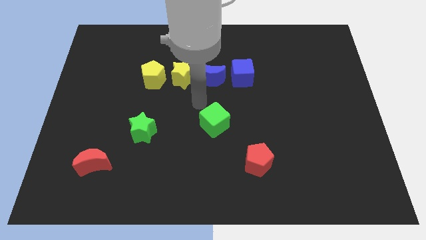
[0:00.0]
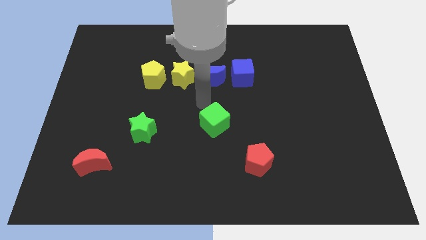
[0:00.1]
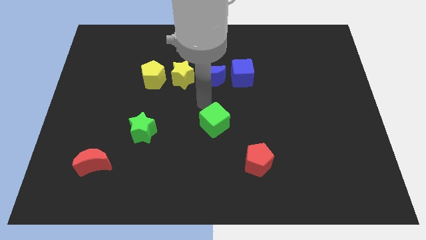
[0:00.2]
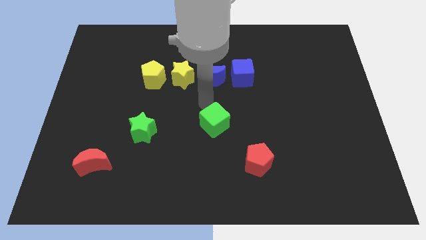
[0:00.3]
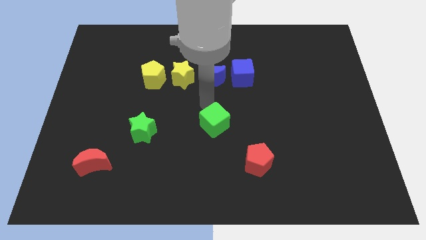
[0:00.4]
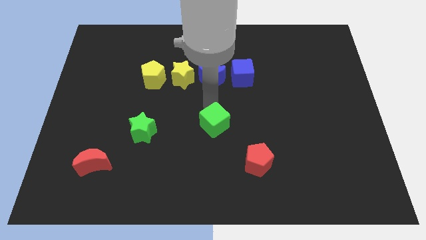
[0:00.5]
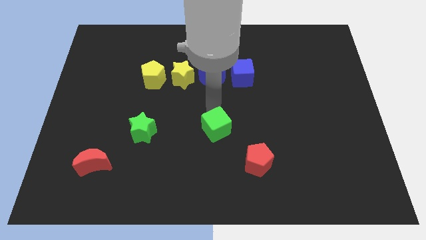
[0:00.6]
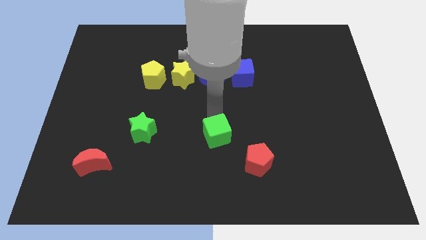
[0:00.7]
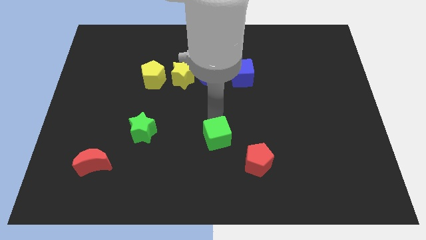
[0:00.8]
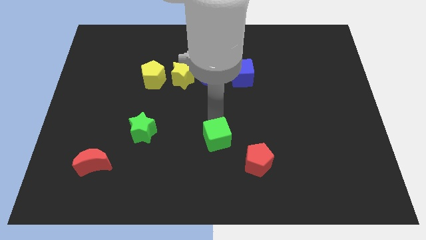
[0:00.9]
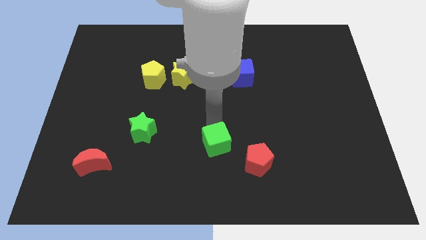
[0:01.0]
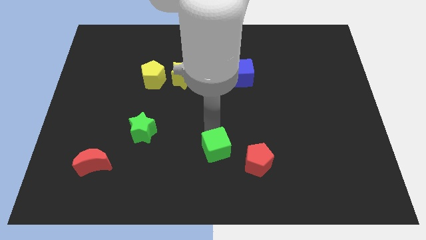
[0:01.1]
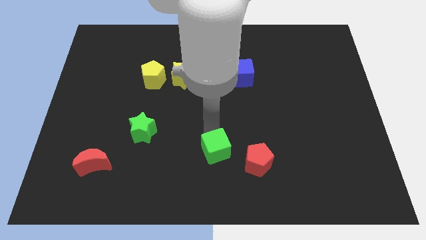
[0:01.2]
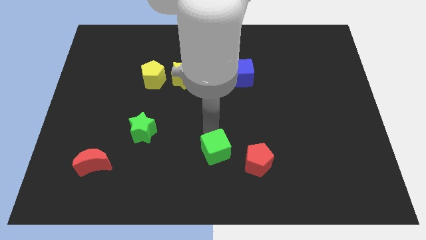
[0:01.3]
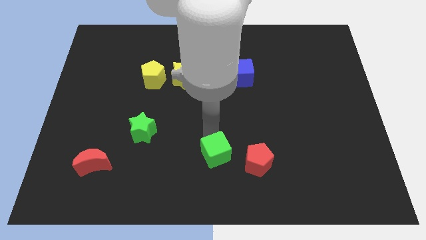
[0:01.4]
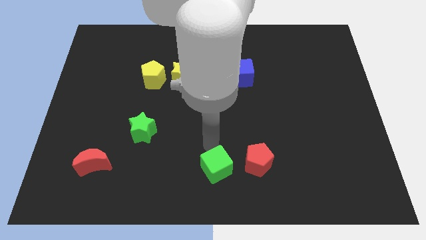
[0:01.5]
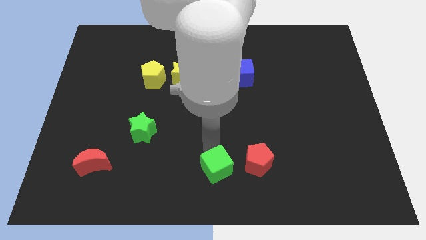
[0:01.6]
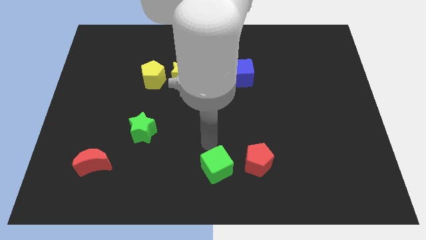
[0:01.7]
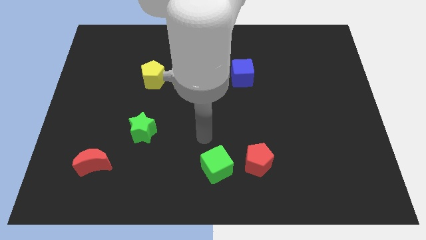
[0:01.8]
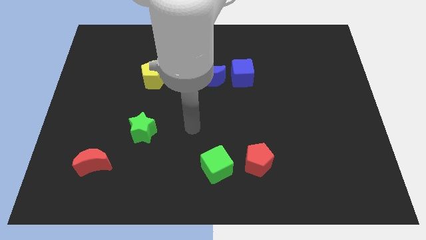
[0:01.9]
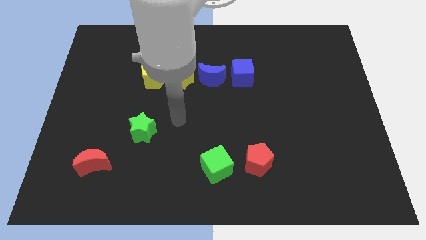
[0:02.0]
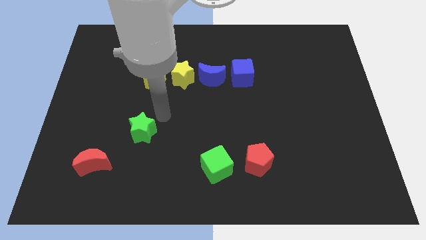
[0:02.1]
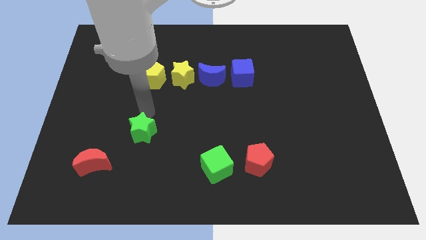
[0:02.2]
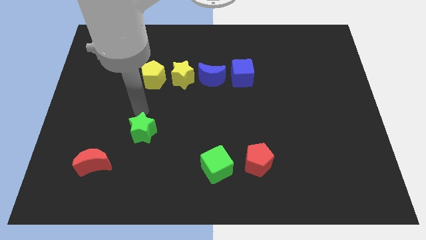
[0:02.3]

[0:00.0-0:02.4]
place the green cube horizontally in between the red pentagon and red crescent

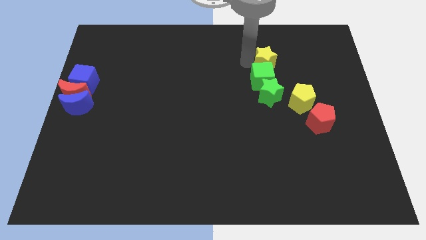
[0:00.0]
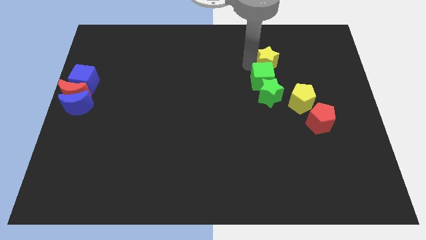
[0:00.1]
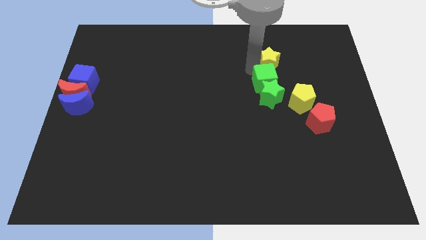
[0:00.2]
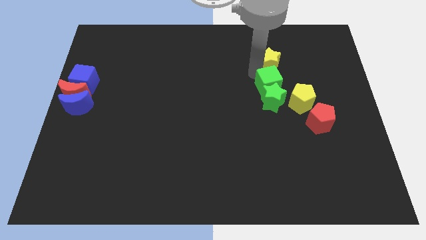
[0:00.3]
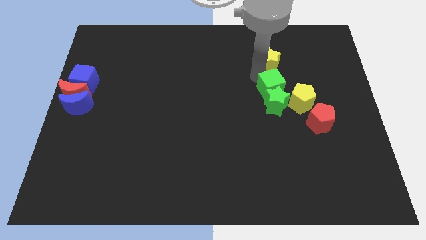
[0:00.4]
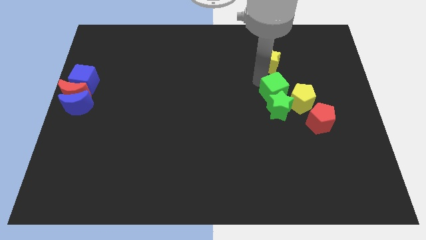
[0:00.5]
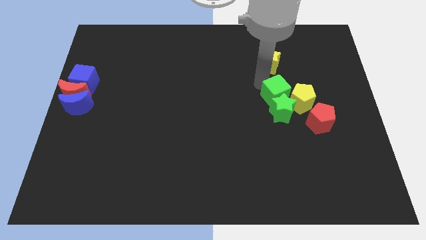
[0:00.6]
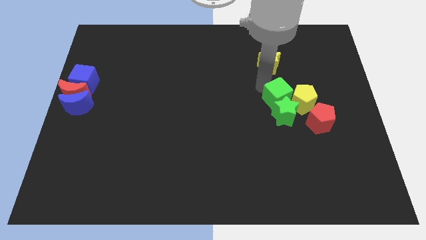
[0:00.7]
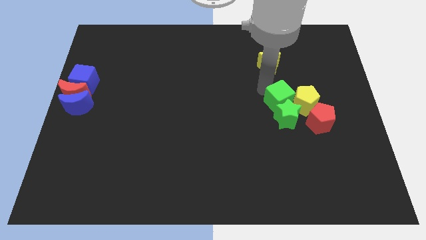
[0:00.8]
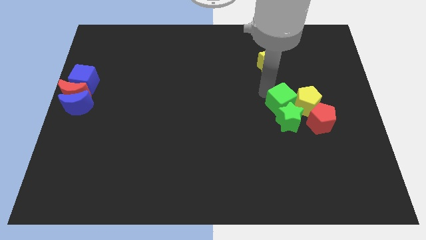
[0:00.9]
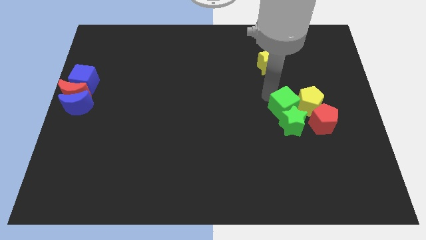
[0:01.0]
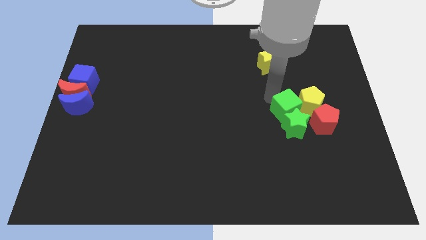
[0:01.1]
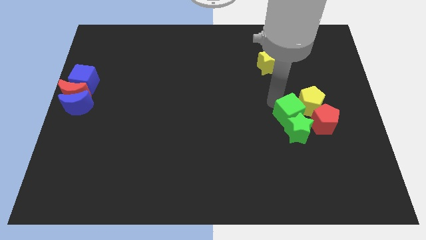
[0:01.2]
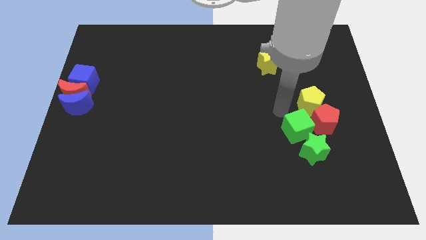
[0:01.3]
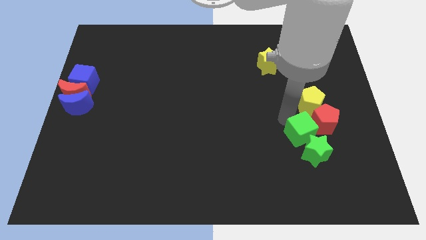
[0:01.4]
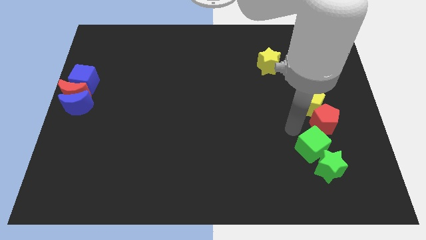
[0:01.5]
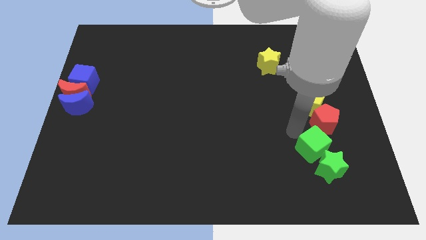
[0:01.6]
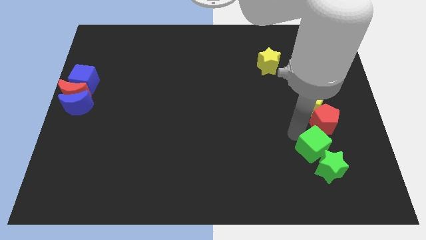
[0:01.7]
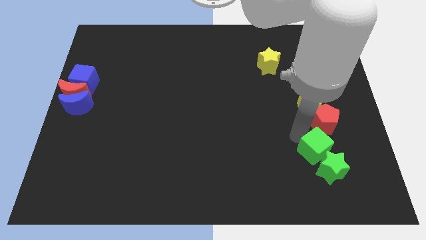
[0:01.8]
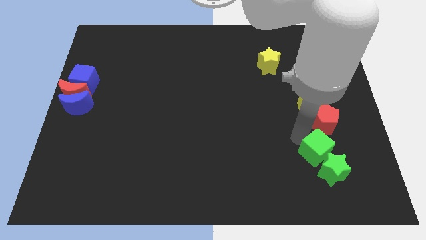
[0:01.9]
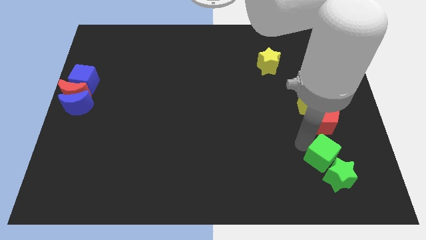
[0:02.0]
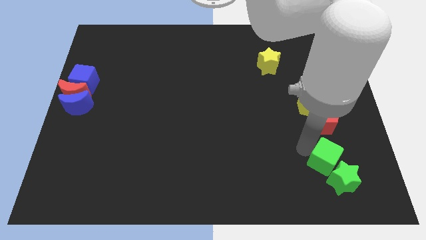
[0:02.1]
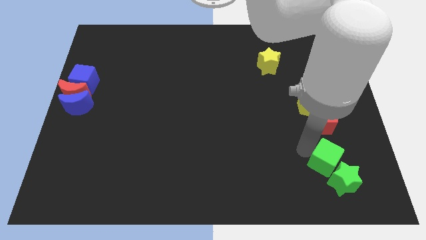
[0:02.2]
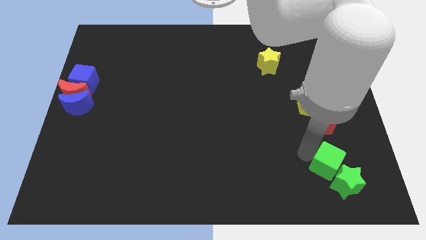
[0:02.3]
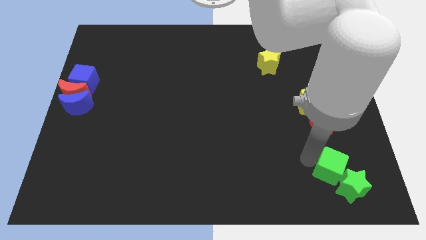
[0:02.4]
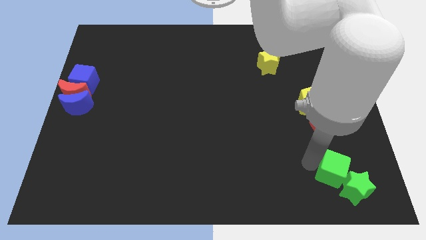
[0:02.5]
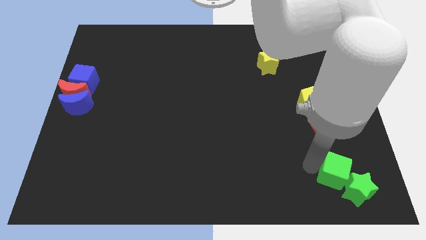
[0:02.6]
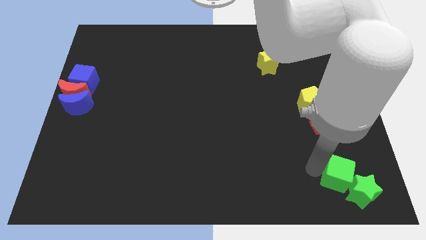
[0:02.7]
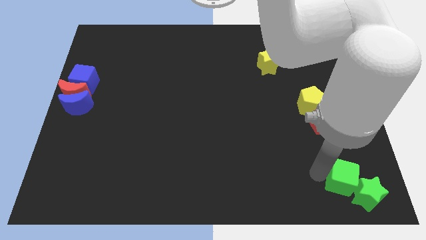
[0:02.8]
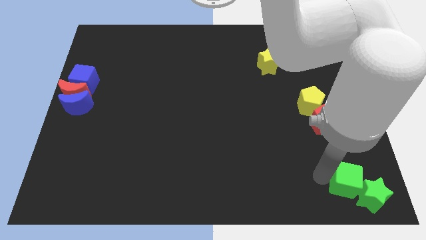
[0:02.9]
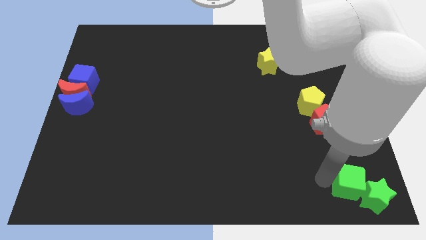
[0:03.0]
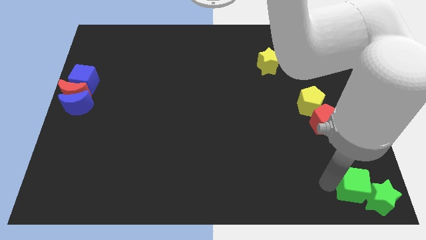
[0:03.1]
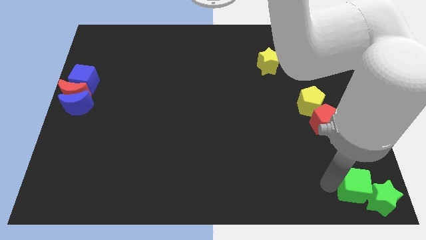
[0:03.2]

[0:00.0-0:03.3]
move green blocks towards the bottom right corner

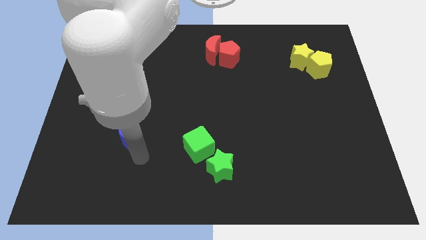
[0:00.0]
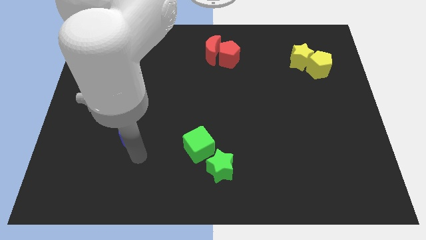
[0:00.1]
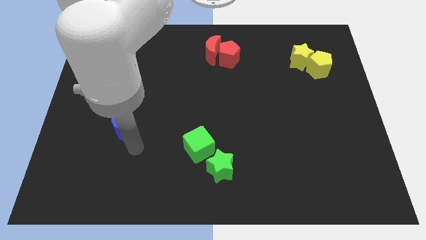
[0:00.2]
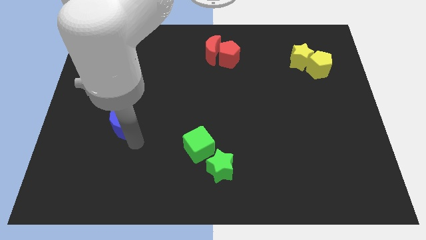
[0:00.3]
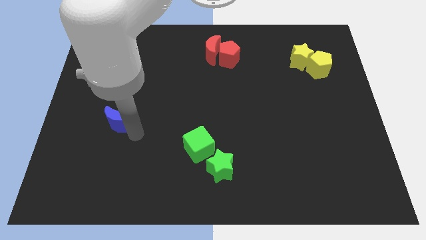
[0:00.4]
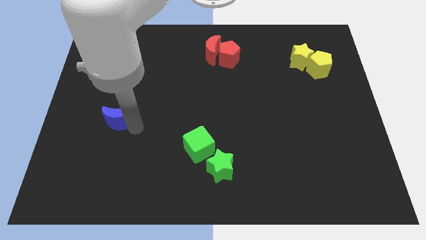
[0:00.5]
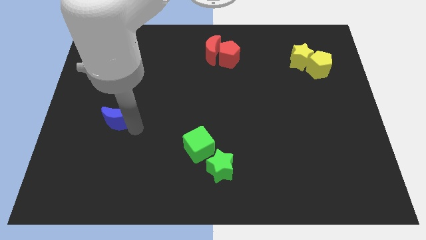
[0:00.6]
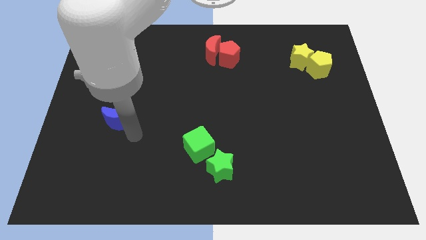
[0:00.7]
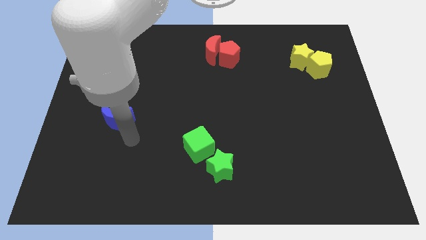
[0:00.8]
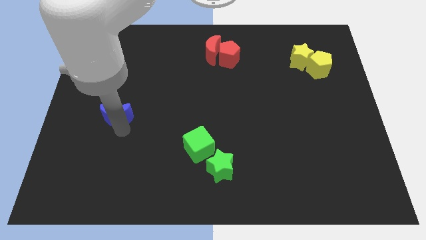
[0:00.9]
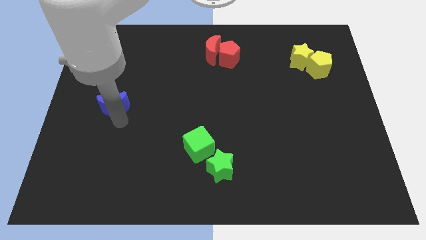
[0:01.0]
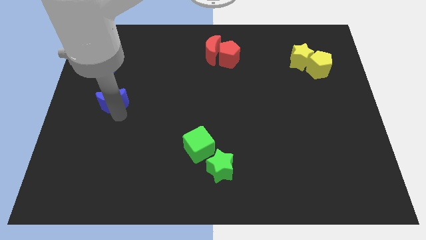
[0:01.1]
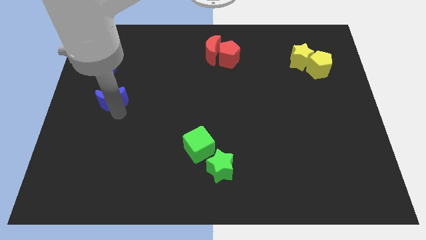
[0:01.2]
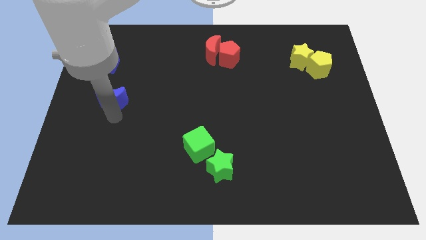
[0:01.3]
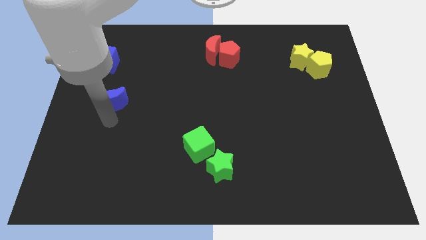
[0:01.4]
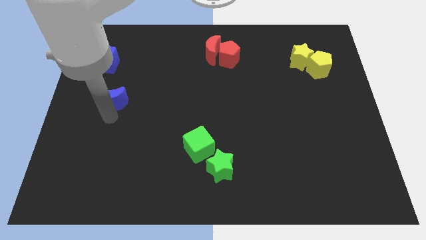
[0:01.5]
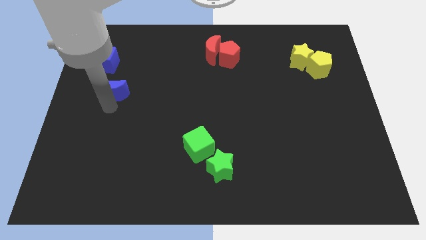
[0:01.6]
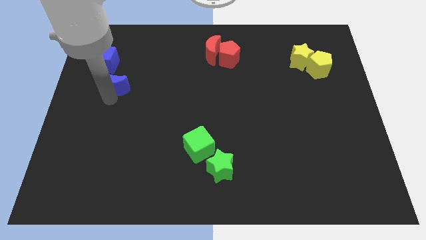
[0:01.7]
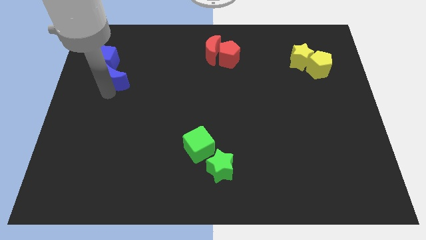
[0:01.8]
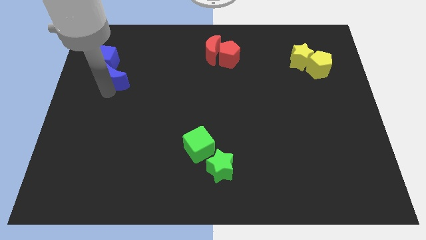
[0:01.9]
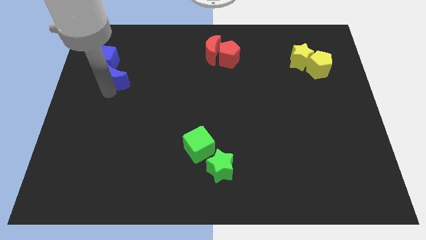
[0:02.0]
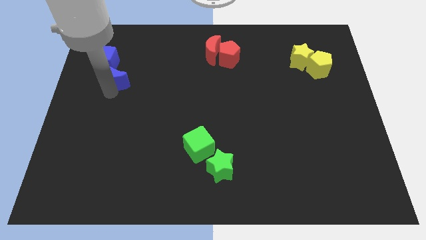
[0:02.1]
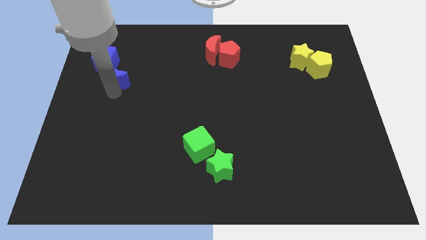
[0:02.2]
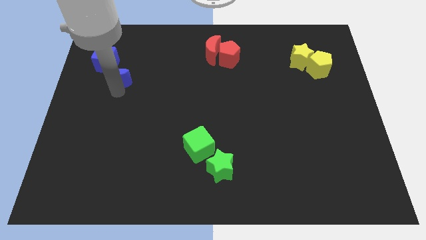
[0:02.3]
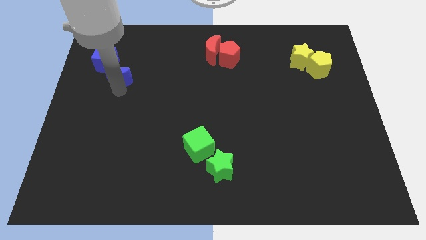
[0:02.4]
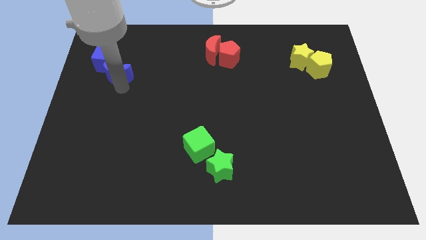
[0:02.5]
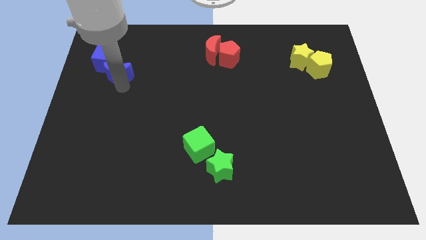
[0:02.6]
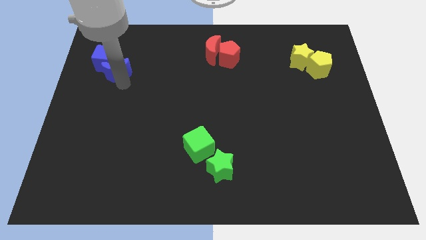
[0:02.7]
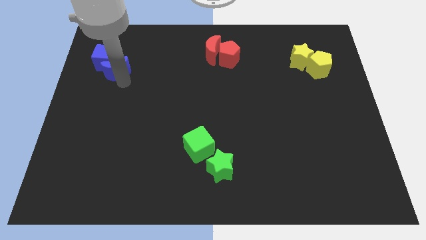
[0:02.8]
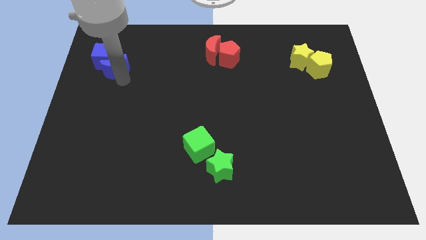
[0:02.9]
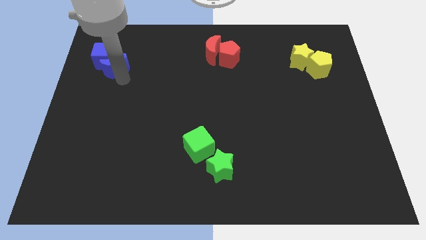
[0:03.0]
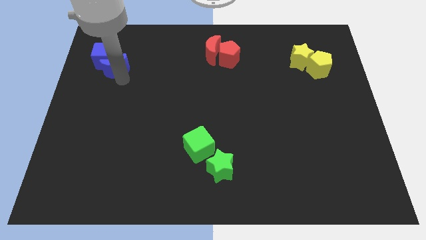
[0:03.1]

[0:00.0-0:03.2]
push the blue crescent into the blue cube

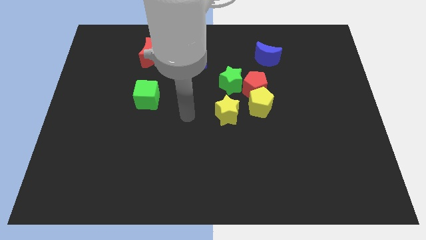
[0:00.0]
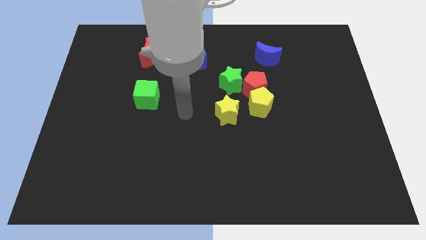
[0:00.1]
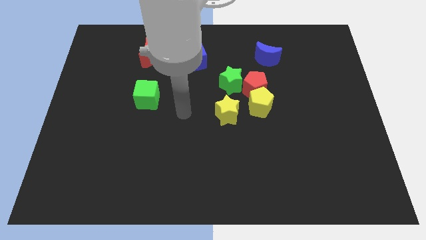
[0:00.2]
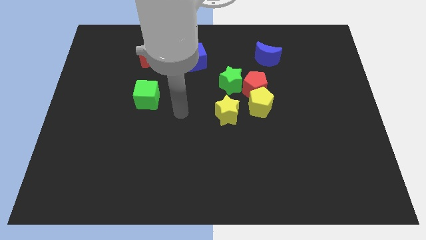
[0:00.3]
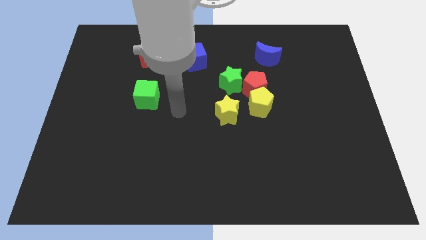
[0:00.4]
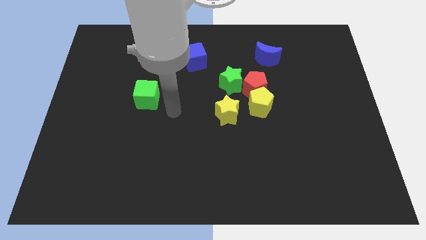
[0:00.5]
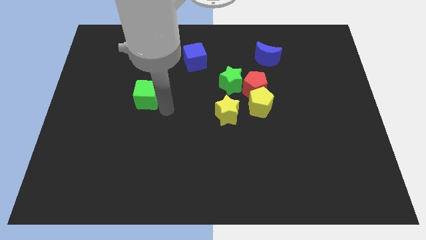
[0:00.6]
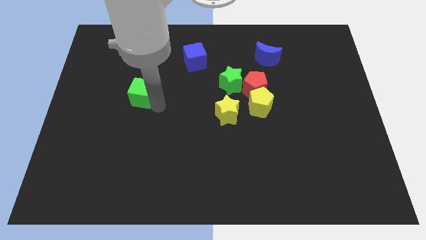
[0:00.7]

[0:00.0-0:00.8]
touch the bottom of green cube
